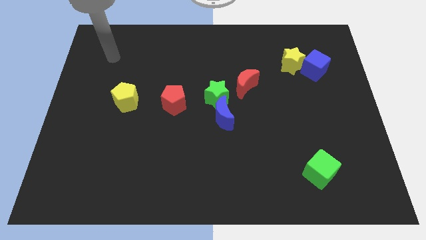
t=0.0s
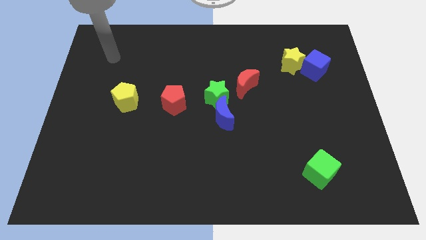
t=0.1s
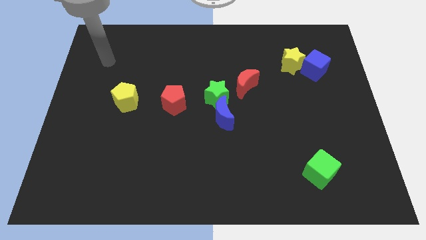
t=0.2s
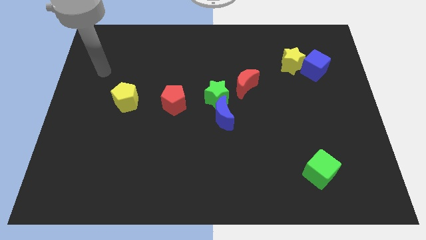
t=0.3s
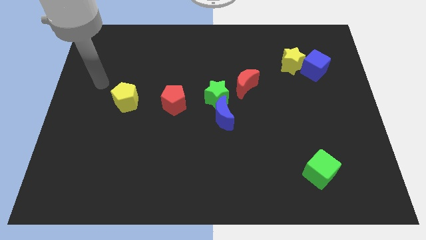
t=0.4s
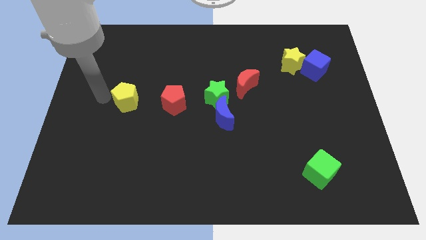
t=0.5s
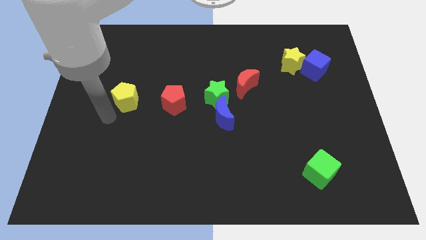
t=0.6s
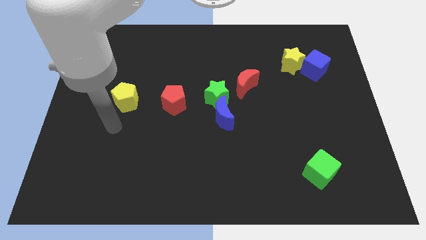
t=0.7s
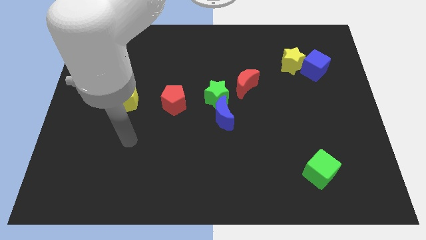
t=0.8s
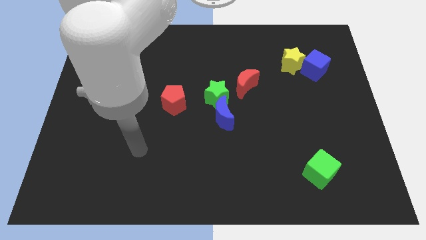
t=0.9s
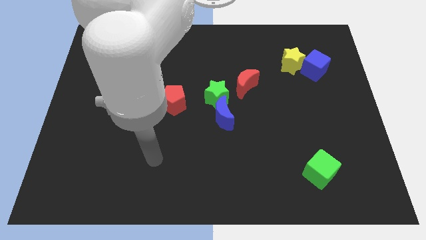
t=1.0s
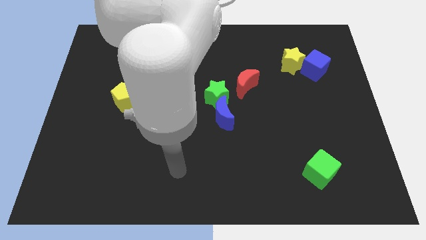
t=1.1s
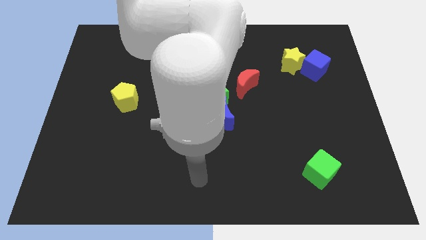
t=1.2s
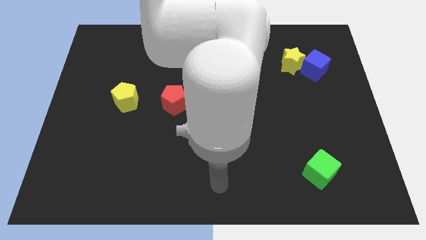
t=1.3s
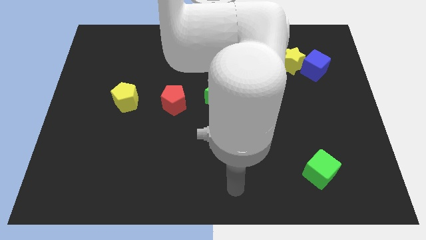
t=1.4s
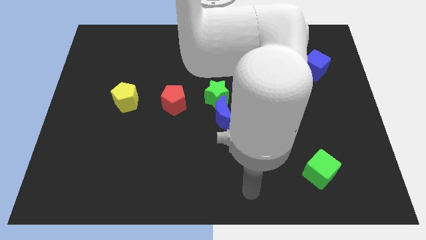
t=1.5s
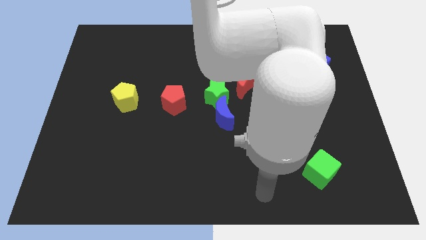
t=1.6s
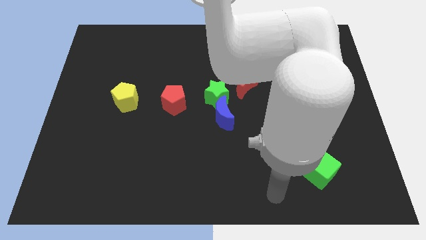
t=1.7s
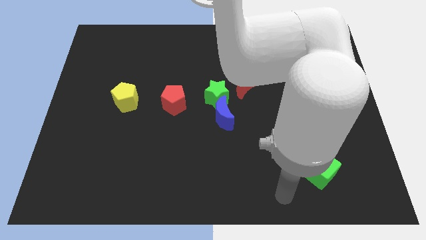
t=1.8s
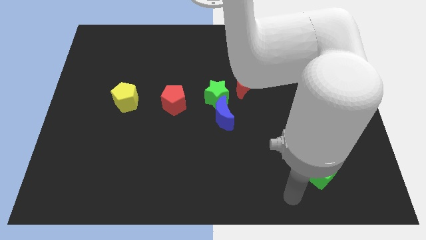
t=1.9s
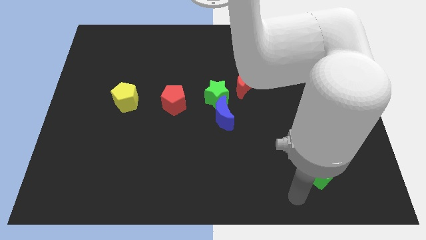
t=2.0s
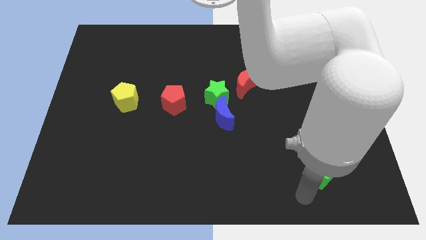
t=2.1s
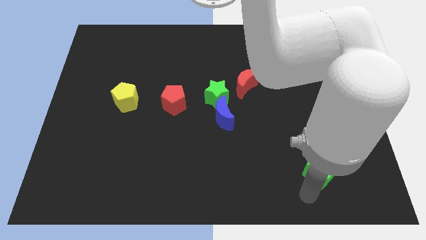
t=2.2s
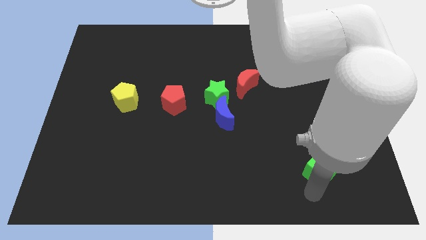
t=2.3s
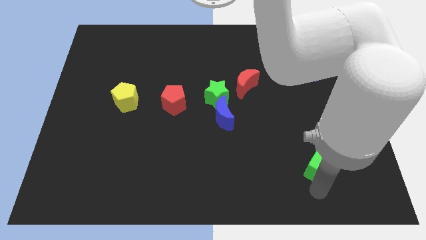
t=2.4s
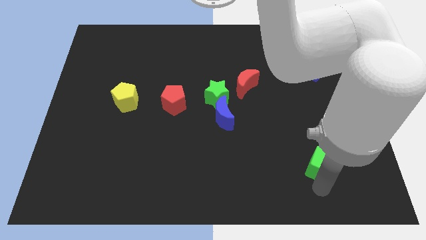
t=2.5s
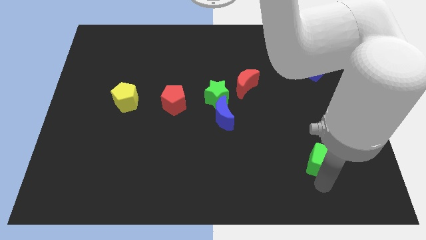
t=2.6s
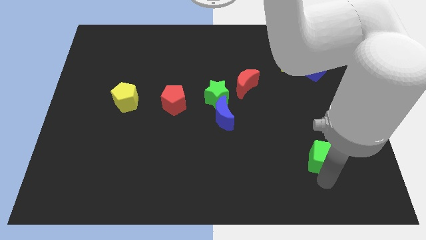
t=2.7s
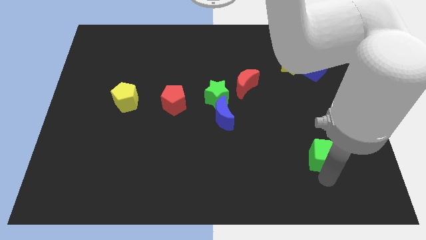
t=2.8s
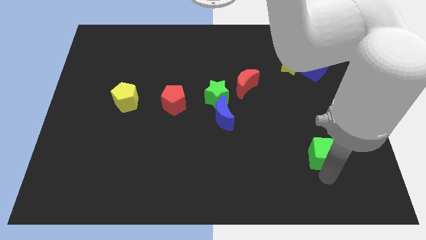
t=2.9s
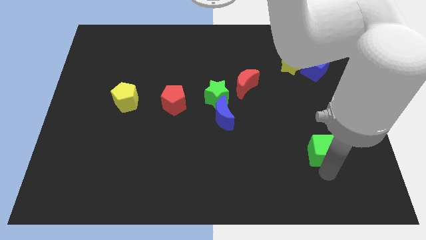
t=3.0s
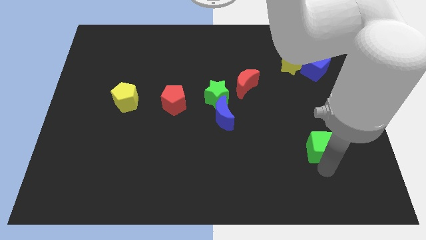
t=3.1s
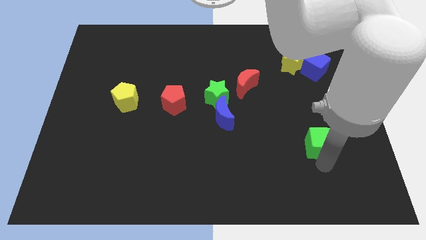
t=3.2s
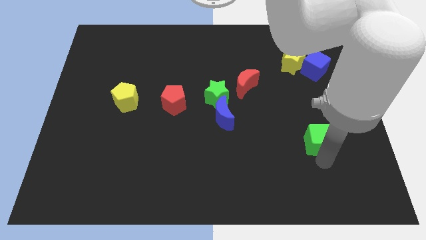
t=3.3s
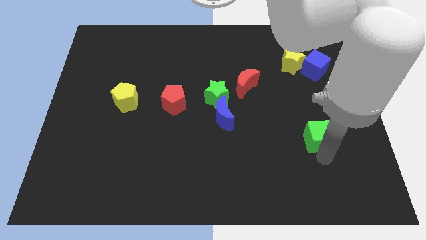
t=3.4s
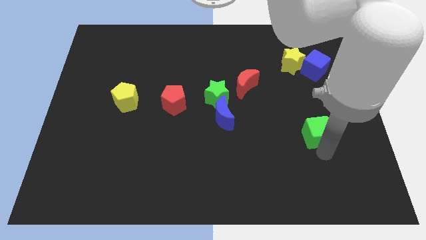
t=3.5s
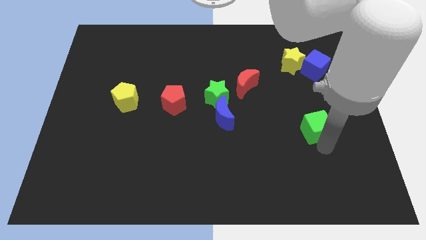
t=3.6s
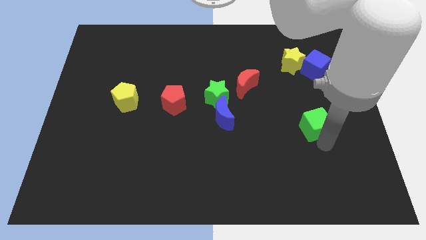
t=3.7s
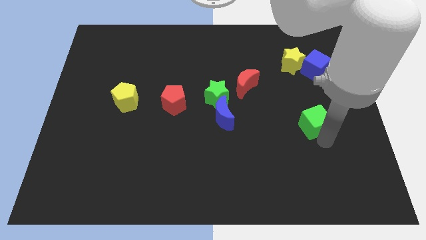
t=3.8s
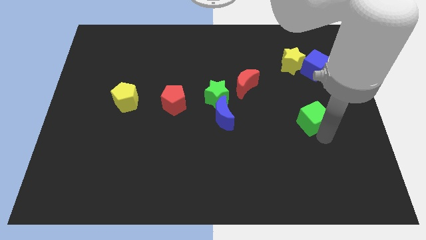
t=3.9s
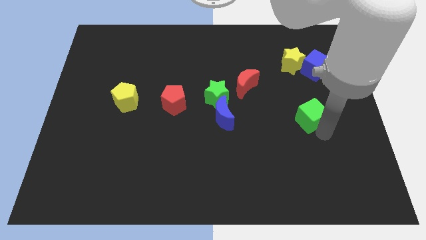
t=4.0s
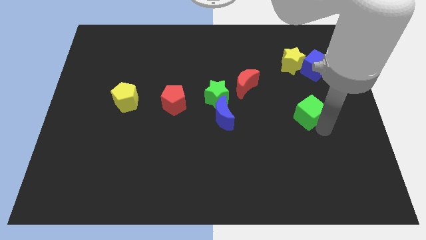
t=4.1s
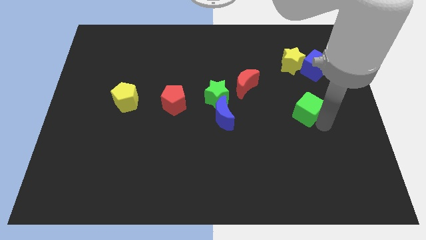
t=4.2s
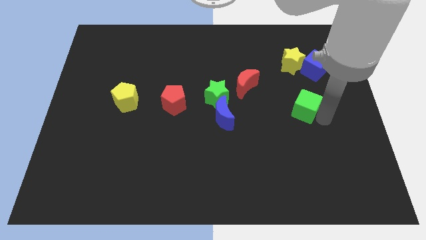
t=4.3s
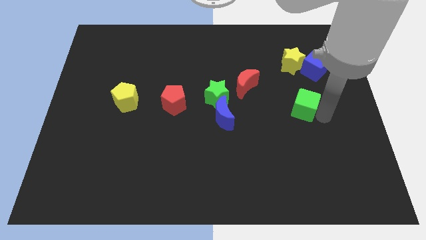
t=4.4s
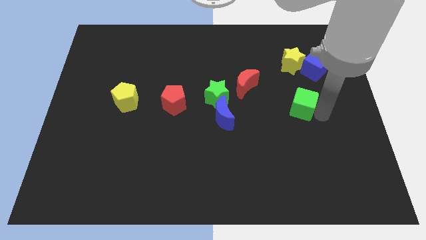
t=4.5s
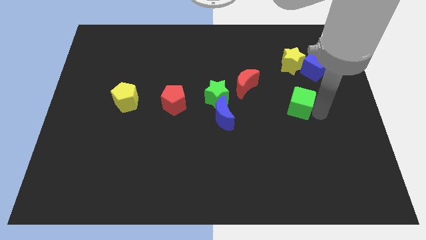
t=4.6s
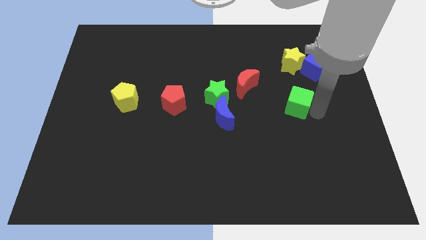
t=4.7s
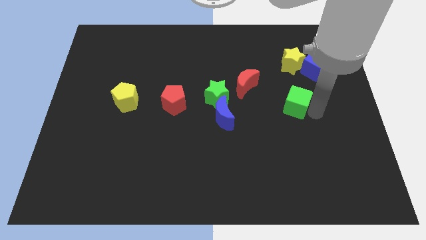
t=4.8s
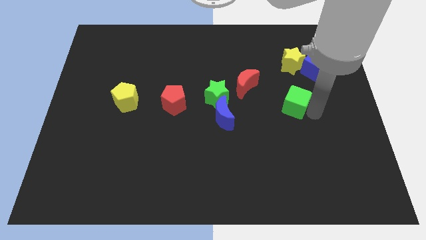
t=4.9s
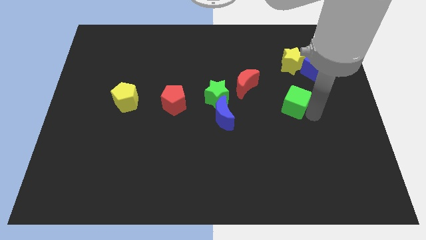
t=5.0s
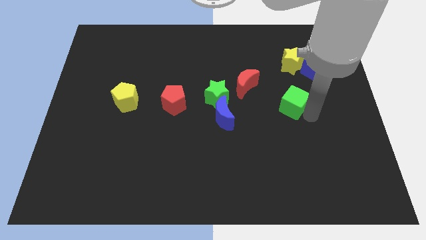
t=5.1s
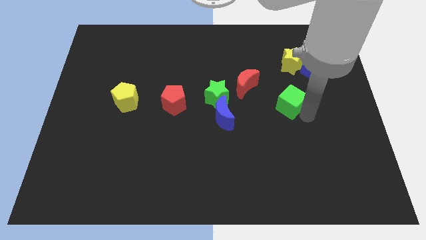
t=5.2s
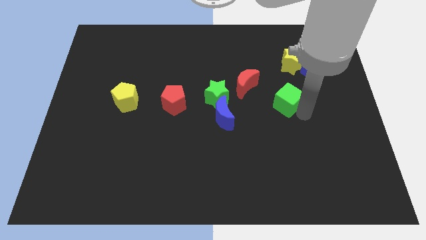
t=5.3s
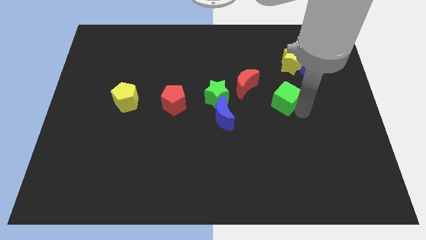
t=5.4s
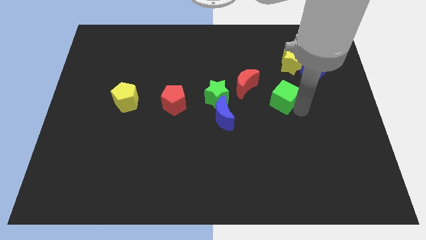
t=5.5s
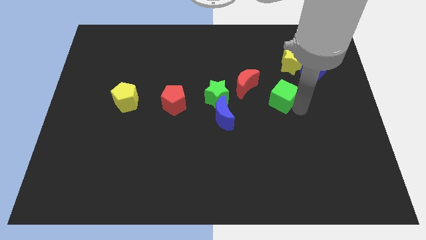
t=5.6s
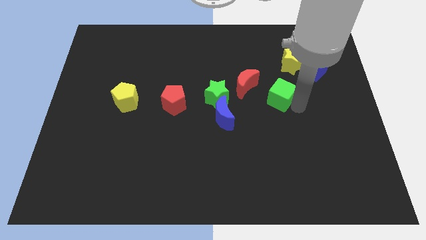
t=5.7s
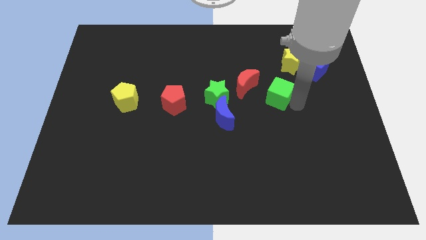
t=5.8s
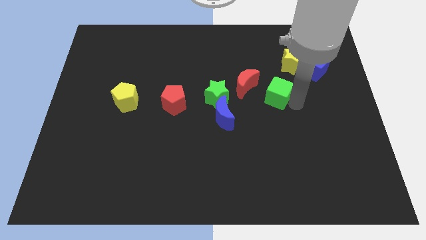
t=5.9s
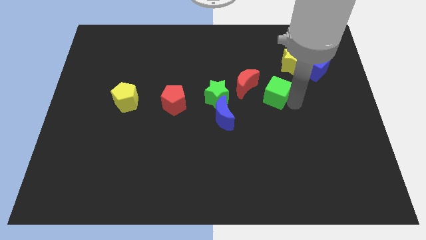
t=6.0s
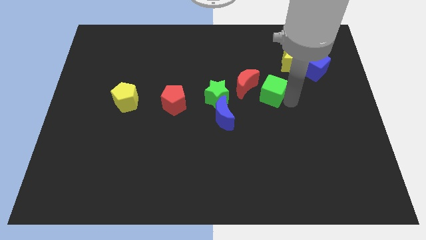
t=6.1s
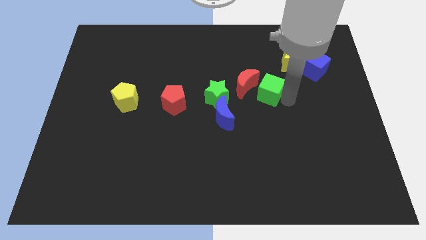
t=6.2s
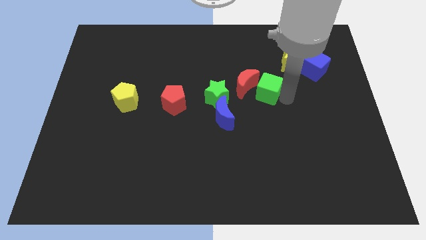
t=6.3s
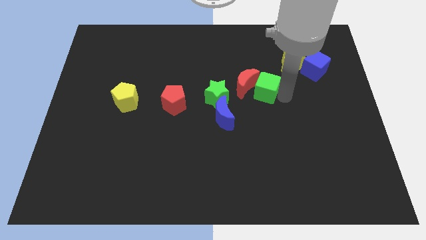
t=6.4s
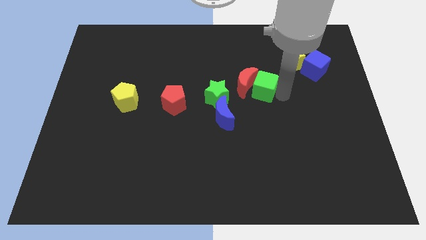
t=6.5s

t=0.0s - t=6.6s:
put the green cube towards the red moon

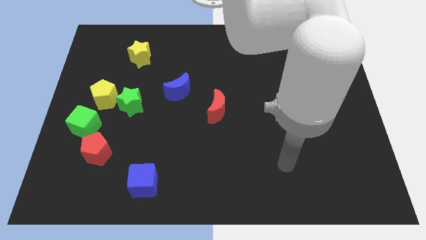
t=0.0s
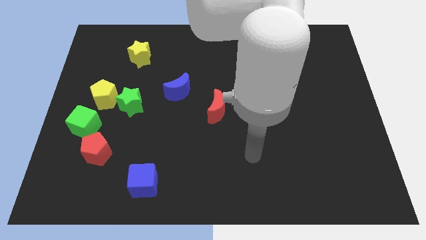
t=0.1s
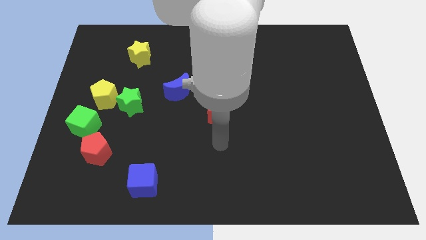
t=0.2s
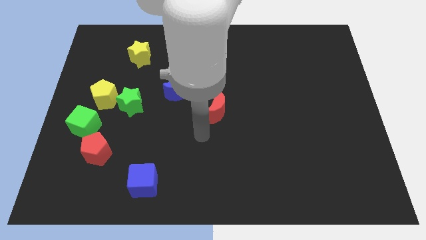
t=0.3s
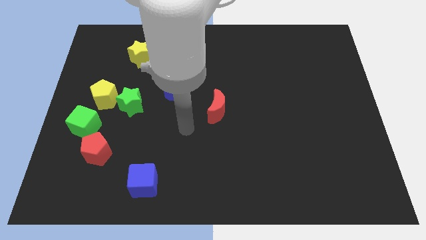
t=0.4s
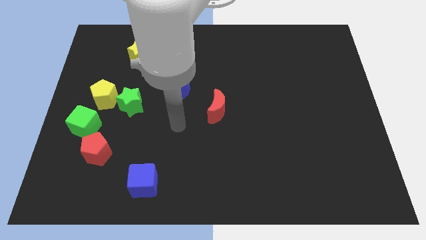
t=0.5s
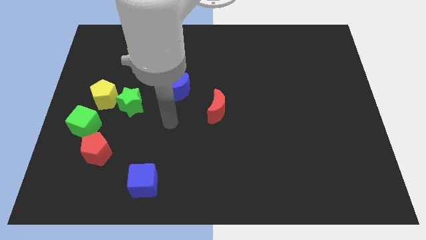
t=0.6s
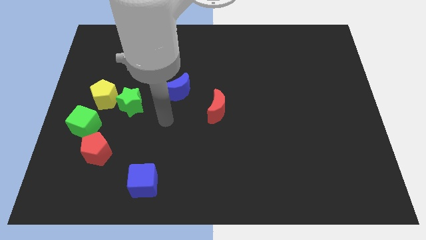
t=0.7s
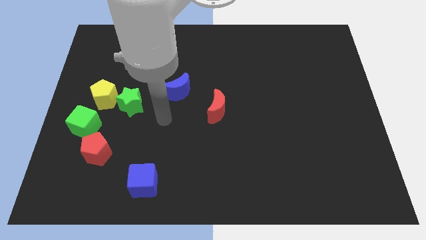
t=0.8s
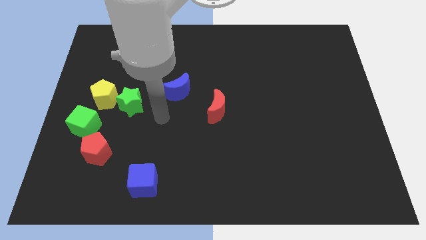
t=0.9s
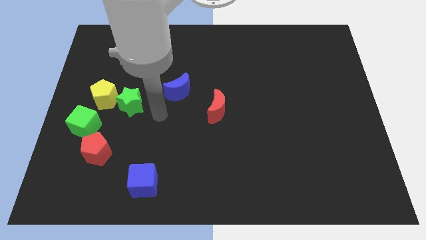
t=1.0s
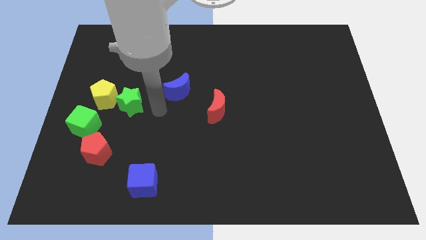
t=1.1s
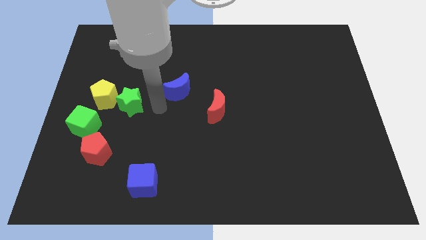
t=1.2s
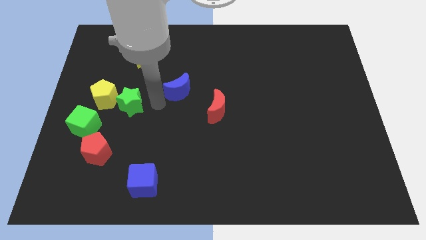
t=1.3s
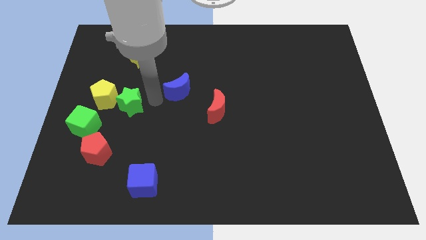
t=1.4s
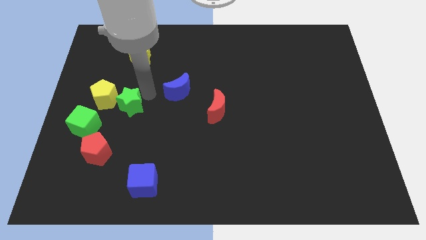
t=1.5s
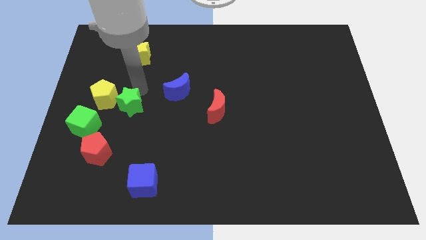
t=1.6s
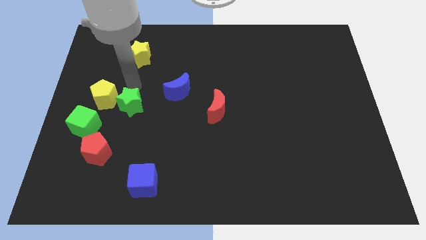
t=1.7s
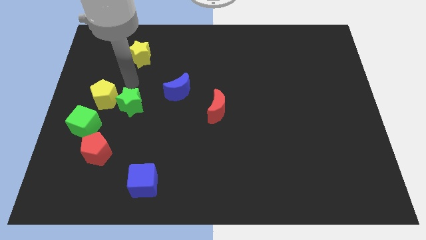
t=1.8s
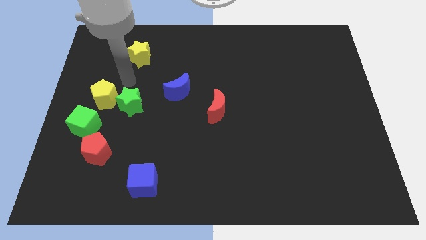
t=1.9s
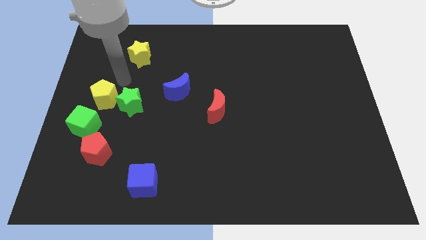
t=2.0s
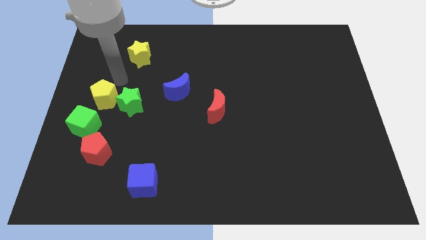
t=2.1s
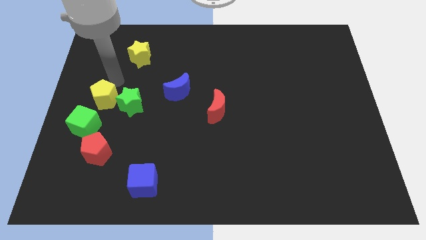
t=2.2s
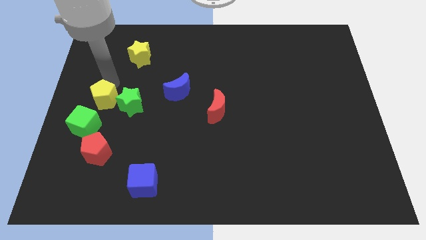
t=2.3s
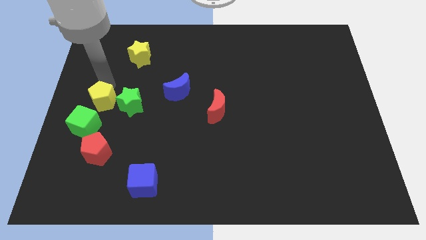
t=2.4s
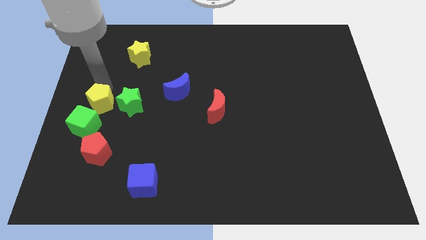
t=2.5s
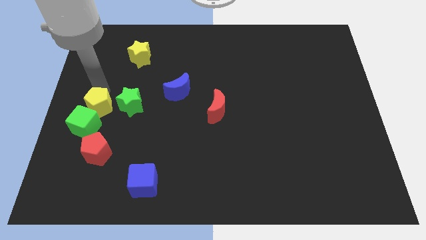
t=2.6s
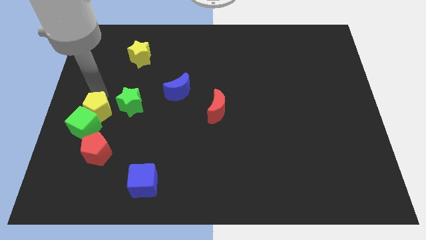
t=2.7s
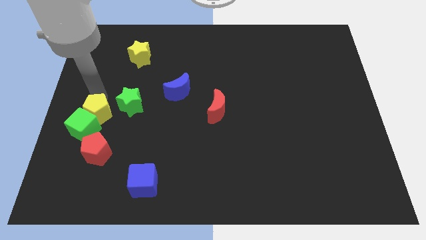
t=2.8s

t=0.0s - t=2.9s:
move the yellow pentagon next to the green cube
